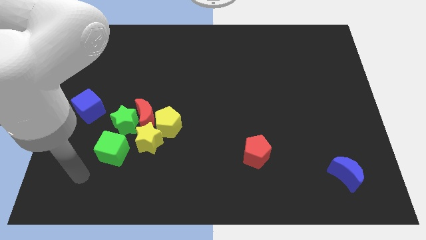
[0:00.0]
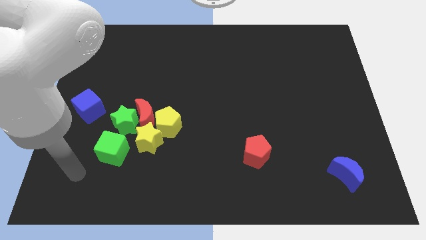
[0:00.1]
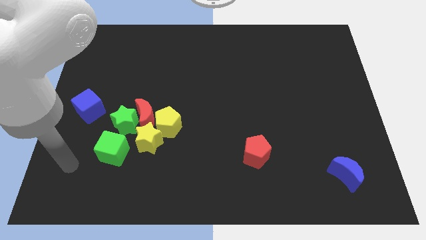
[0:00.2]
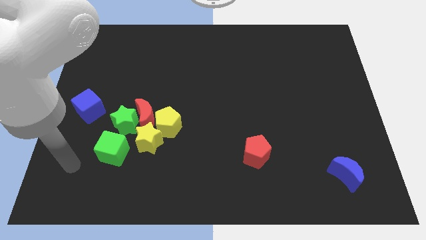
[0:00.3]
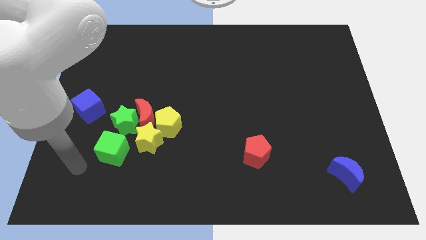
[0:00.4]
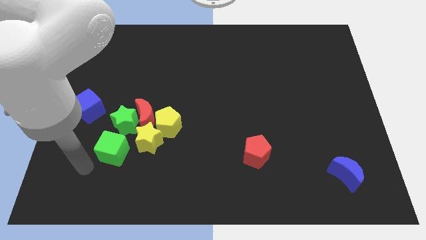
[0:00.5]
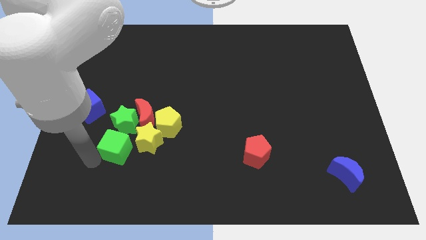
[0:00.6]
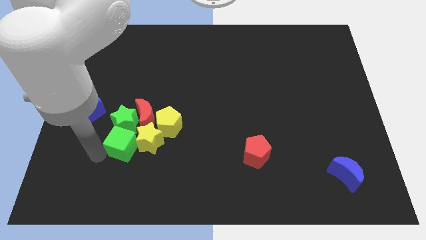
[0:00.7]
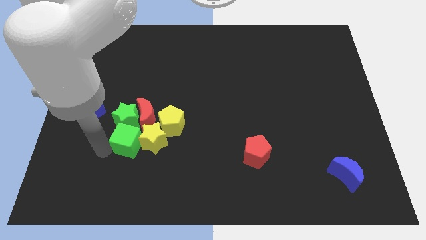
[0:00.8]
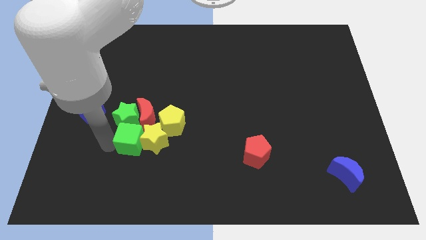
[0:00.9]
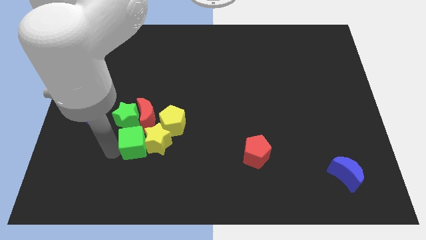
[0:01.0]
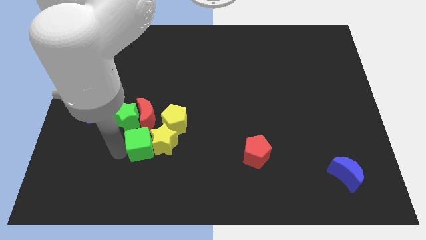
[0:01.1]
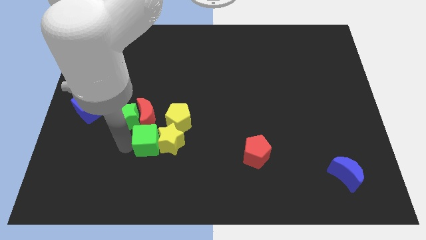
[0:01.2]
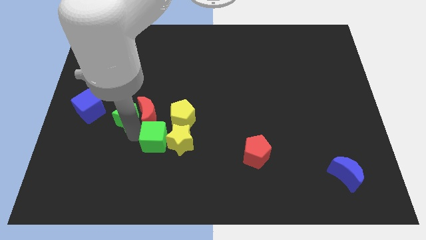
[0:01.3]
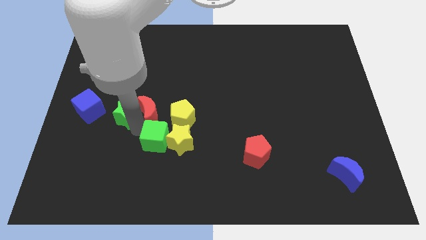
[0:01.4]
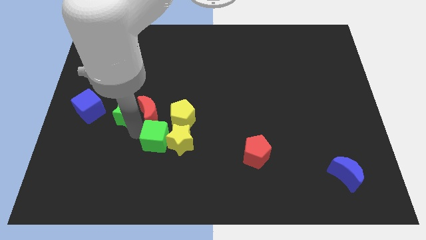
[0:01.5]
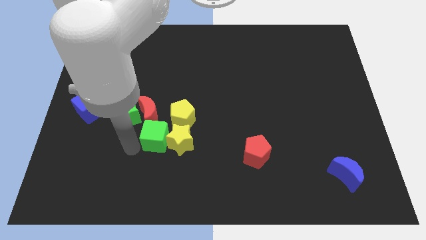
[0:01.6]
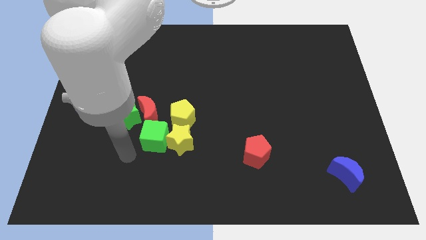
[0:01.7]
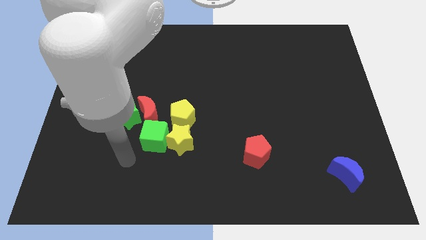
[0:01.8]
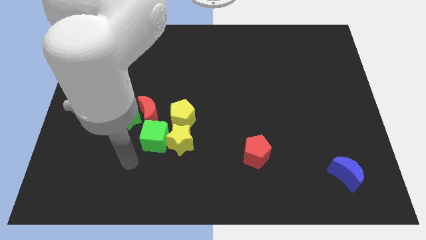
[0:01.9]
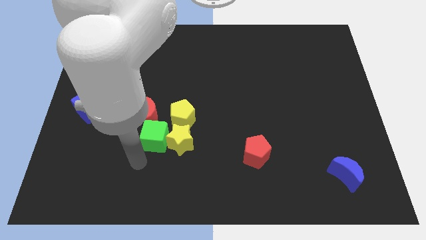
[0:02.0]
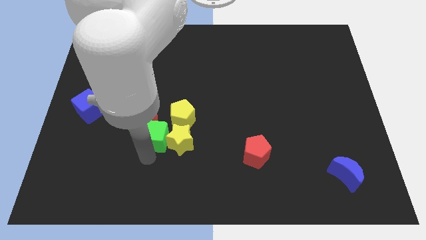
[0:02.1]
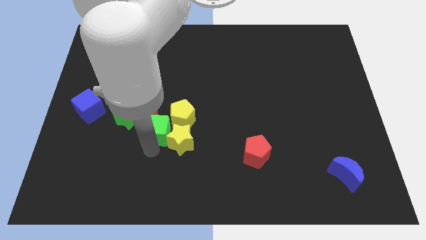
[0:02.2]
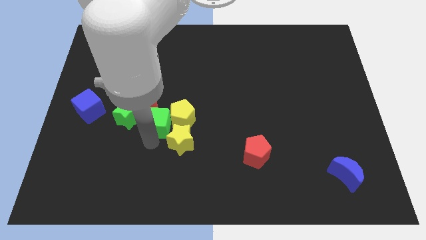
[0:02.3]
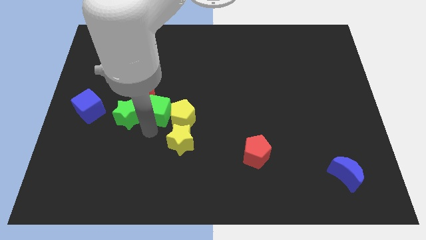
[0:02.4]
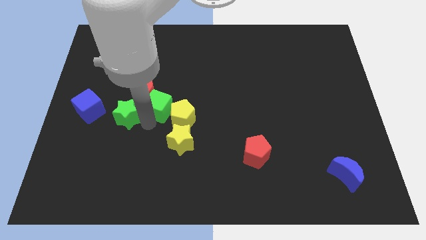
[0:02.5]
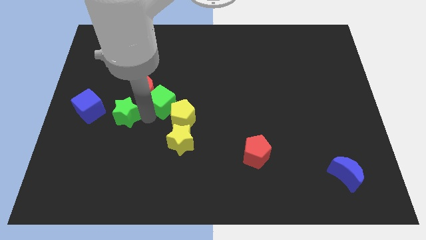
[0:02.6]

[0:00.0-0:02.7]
push the green cube to the red moon

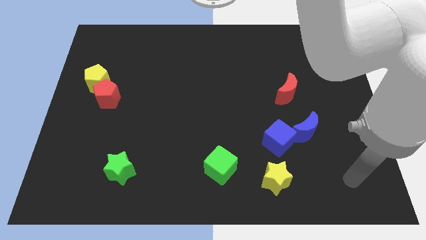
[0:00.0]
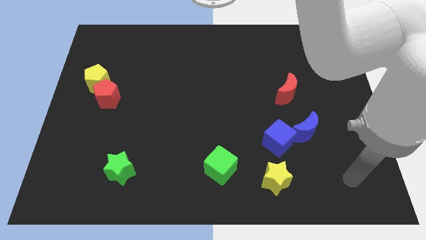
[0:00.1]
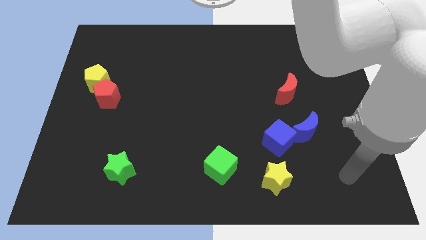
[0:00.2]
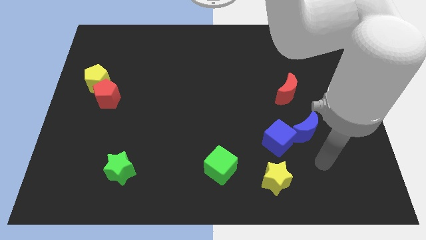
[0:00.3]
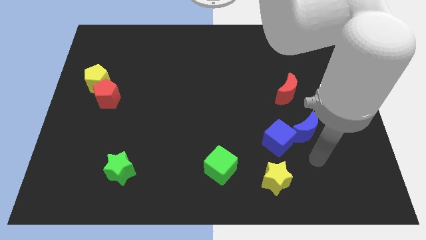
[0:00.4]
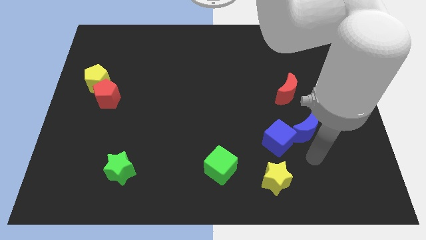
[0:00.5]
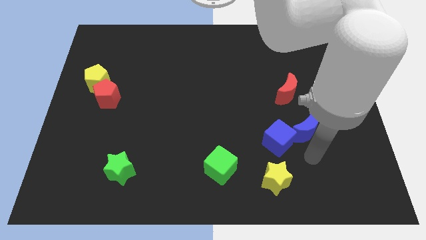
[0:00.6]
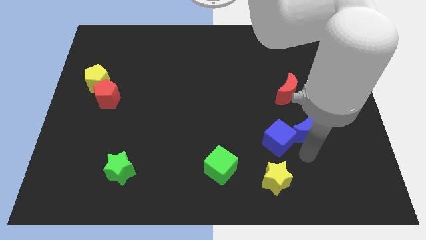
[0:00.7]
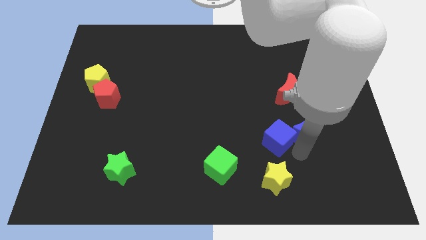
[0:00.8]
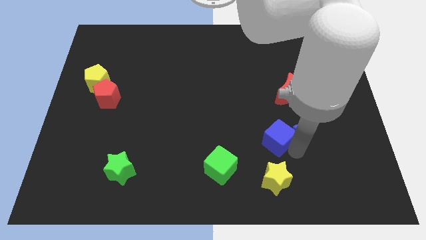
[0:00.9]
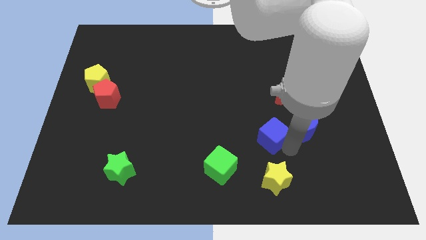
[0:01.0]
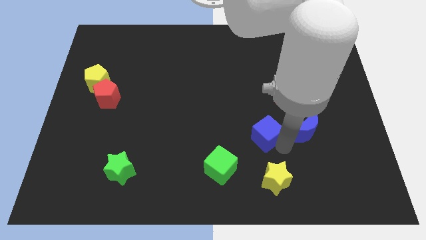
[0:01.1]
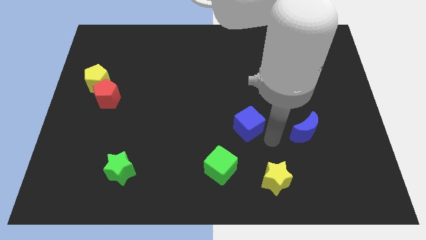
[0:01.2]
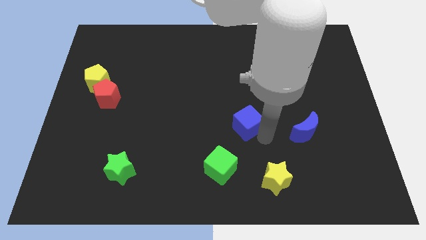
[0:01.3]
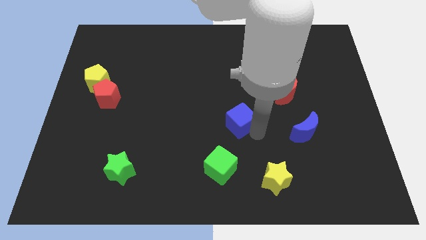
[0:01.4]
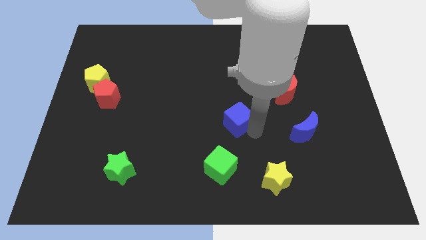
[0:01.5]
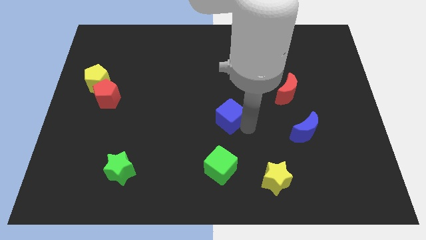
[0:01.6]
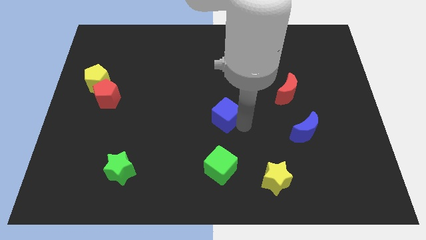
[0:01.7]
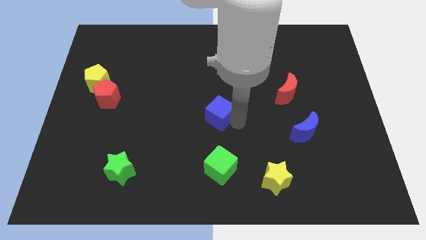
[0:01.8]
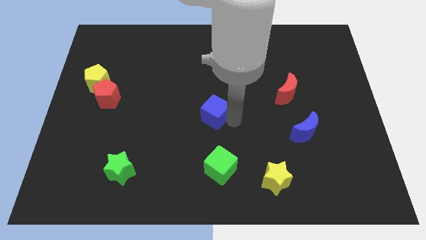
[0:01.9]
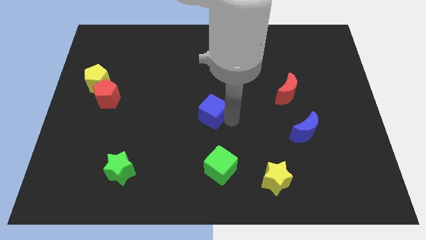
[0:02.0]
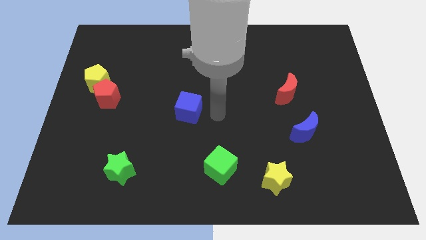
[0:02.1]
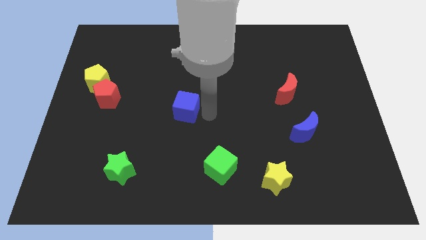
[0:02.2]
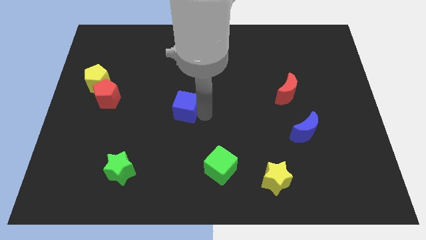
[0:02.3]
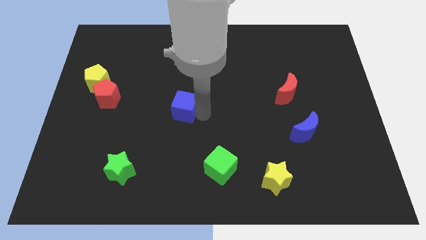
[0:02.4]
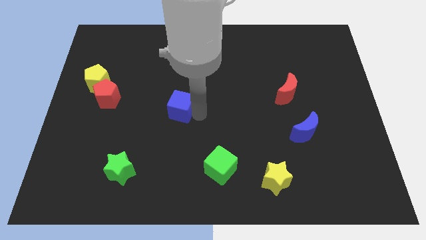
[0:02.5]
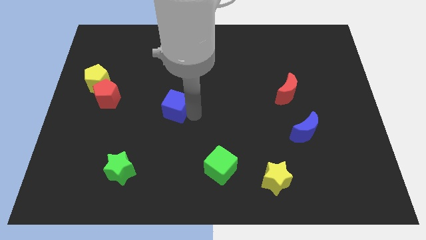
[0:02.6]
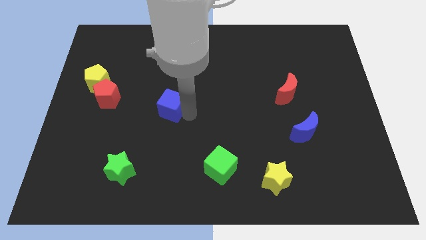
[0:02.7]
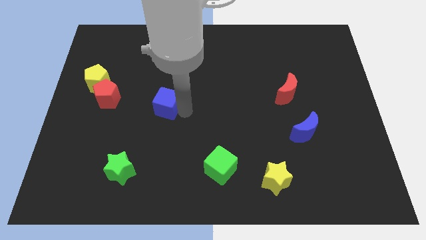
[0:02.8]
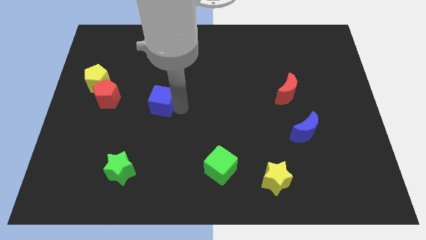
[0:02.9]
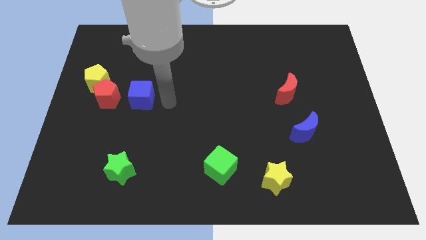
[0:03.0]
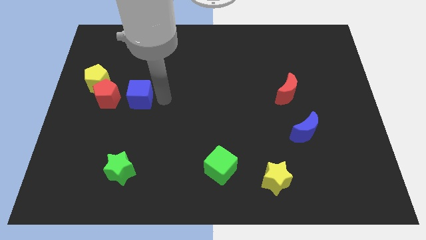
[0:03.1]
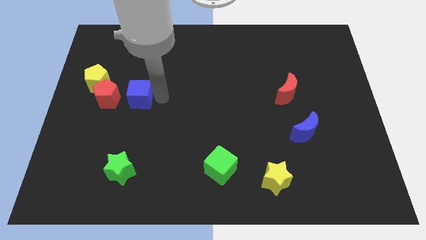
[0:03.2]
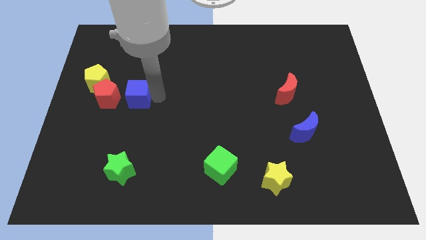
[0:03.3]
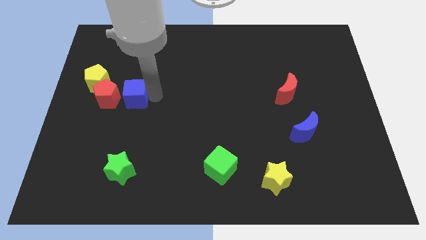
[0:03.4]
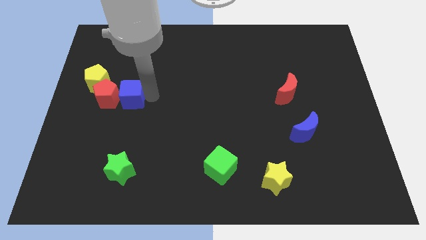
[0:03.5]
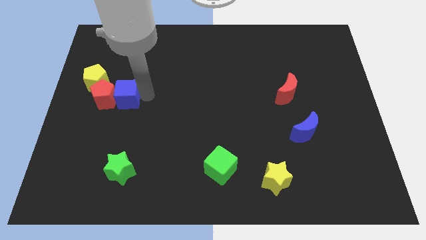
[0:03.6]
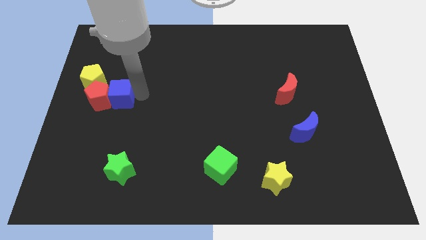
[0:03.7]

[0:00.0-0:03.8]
slide the blue cube towards the red pentagon

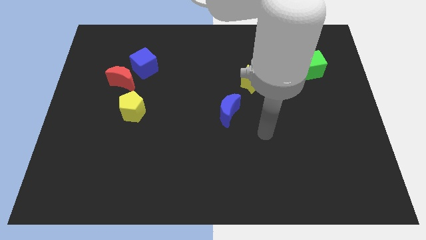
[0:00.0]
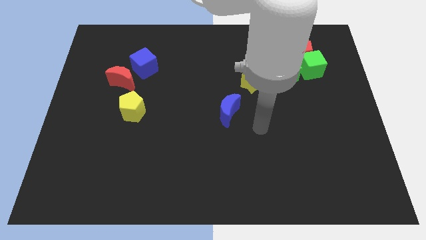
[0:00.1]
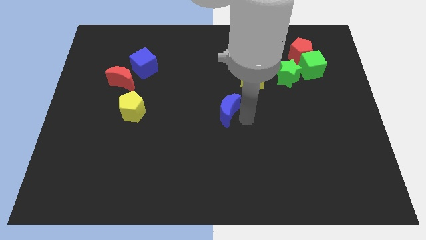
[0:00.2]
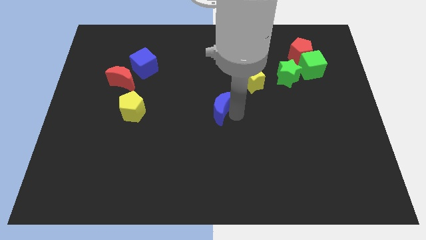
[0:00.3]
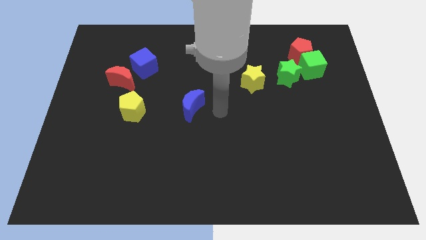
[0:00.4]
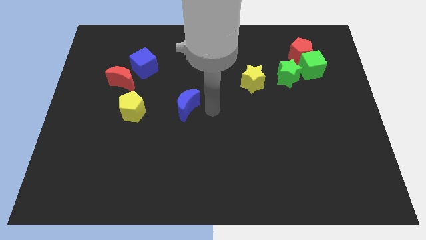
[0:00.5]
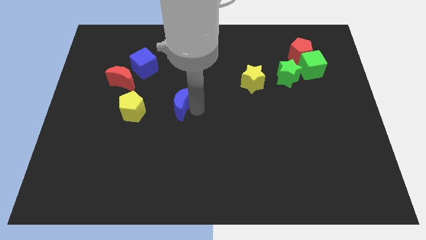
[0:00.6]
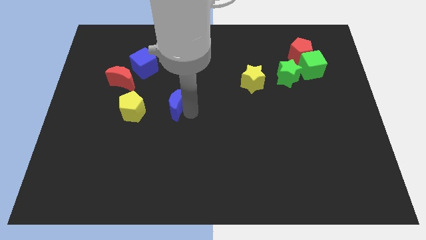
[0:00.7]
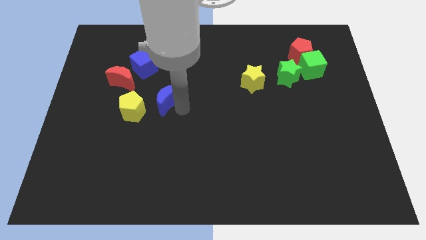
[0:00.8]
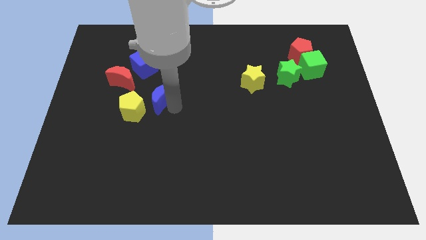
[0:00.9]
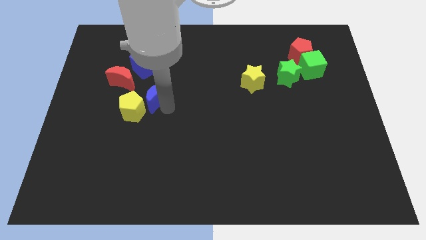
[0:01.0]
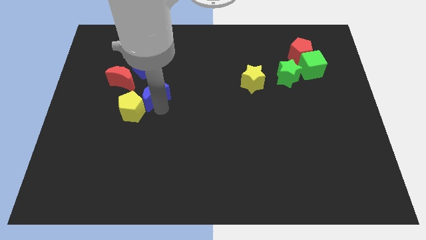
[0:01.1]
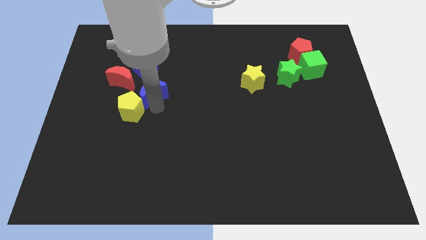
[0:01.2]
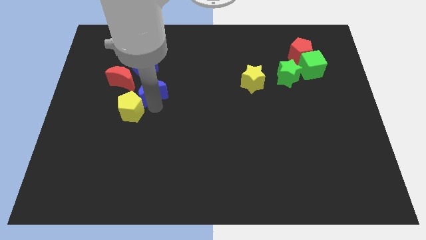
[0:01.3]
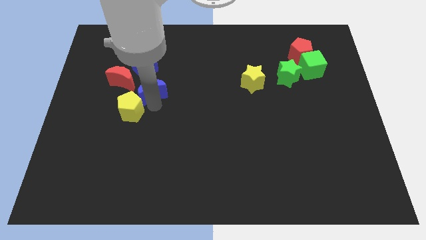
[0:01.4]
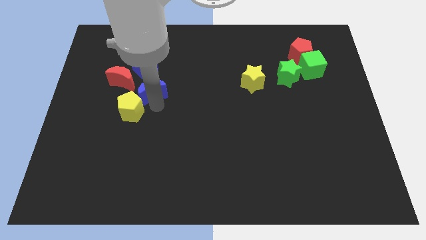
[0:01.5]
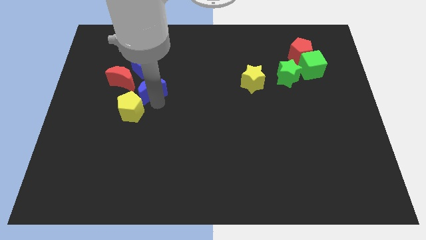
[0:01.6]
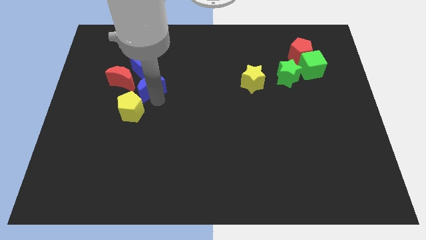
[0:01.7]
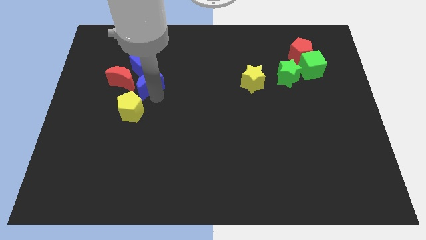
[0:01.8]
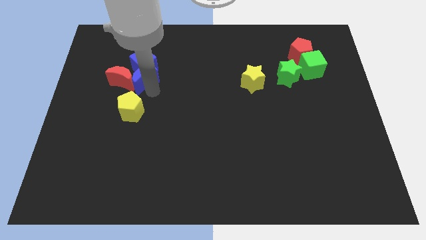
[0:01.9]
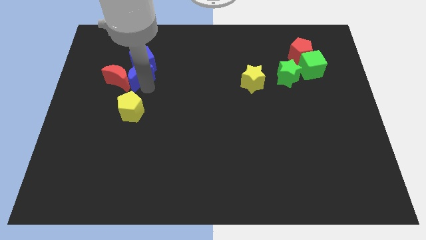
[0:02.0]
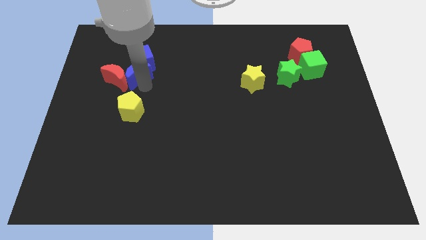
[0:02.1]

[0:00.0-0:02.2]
put the blue moon towards the red moon
